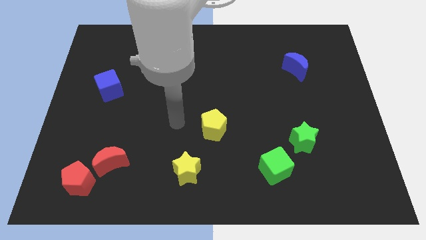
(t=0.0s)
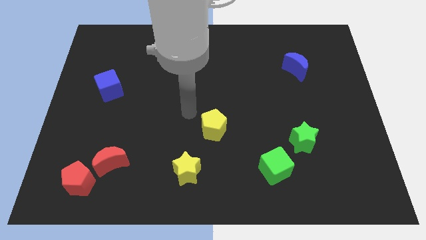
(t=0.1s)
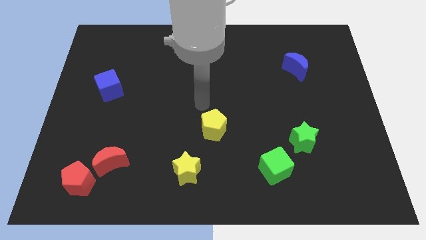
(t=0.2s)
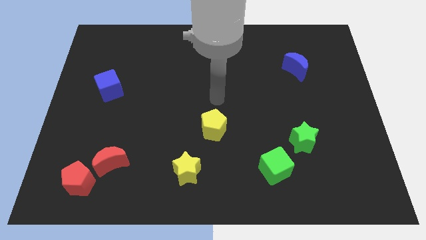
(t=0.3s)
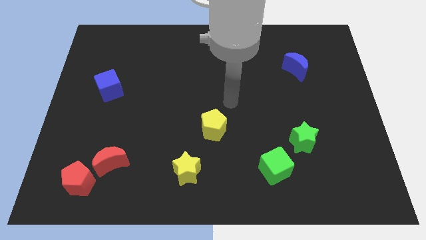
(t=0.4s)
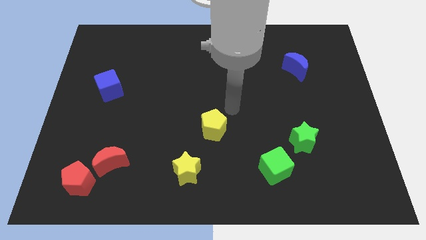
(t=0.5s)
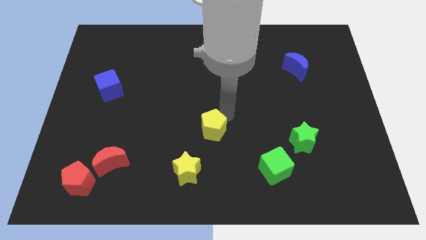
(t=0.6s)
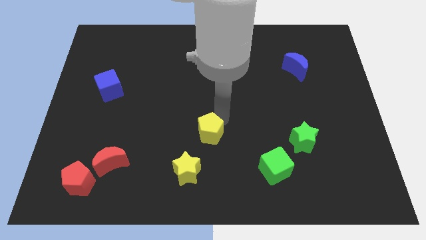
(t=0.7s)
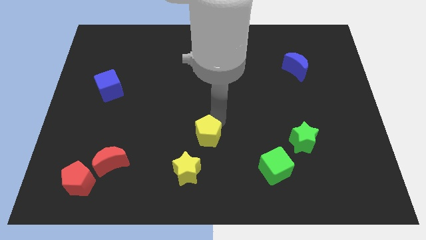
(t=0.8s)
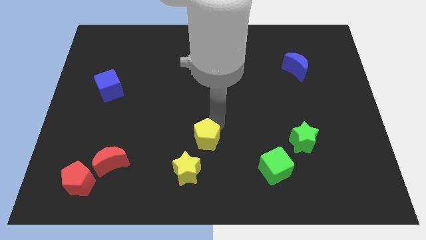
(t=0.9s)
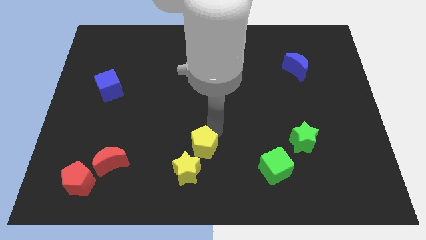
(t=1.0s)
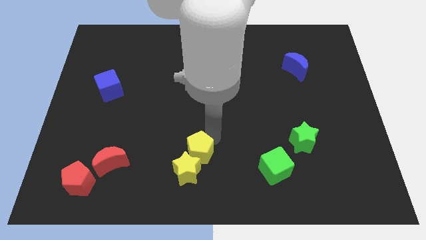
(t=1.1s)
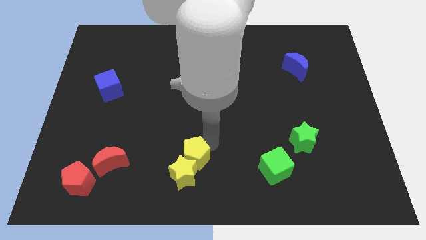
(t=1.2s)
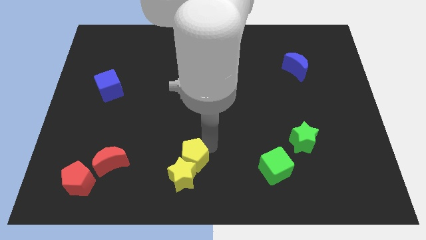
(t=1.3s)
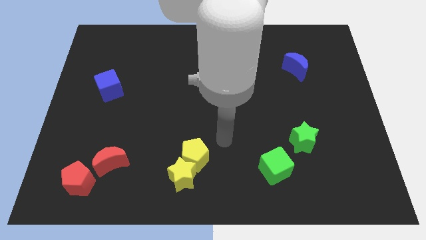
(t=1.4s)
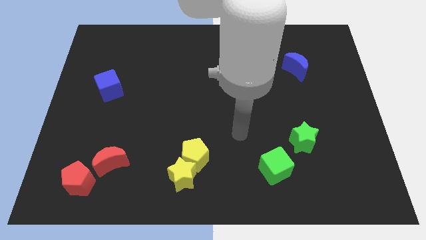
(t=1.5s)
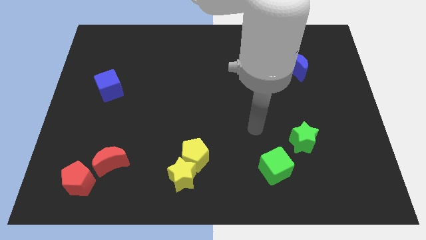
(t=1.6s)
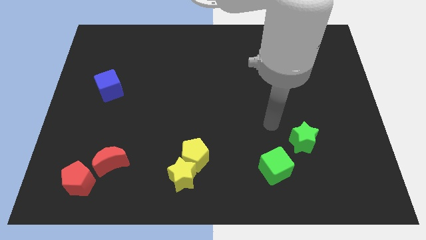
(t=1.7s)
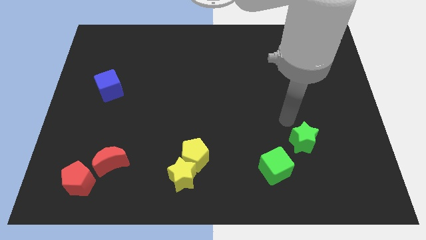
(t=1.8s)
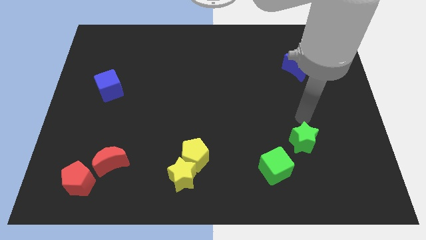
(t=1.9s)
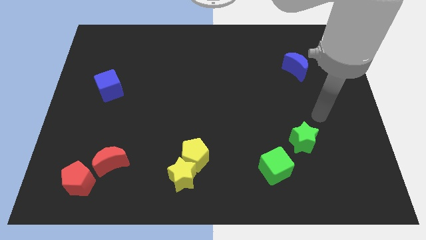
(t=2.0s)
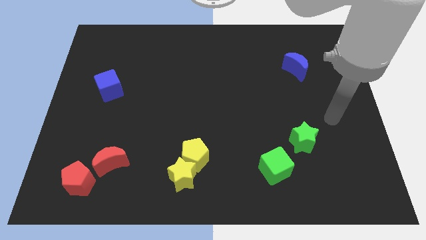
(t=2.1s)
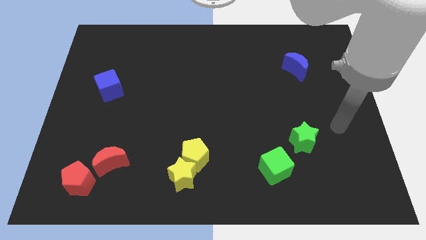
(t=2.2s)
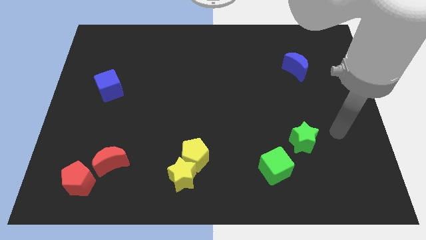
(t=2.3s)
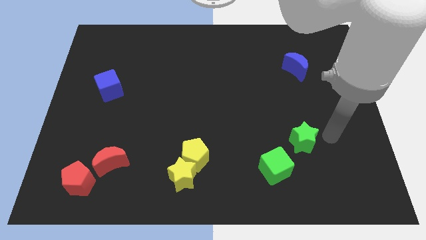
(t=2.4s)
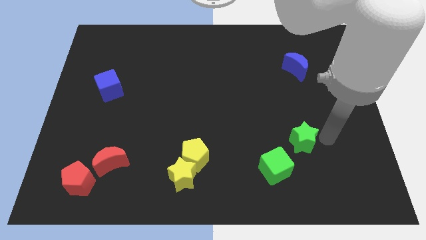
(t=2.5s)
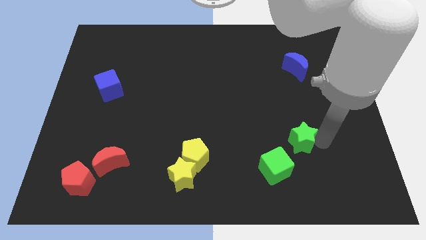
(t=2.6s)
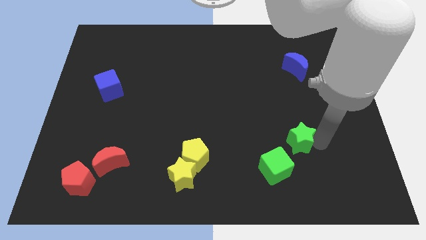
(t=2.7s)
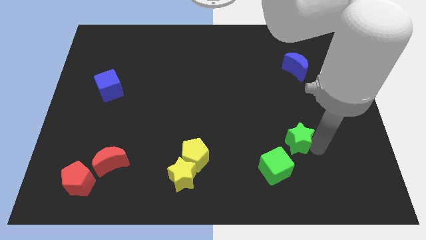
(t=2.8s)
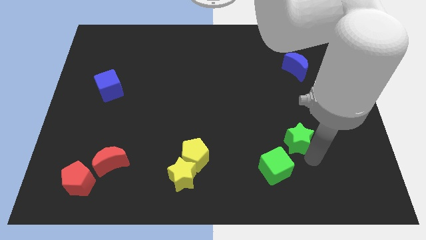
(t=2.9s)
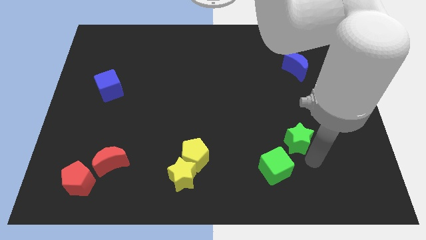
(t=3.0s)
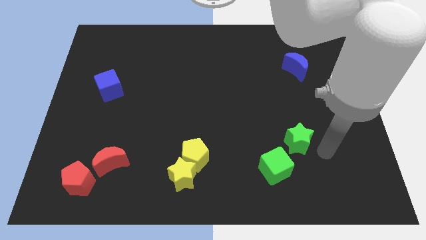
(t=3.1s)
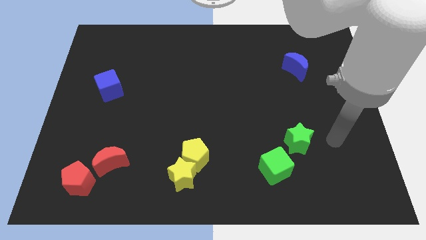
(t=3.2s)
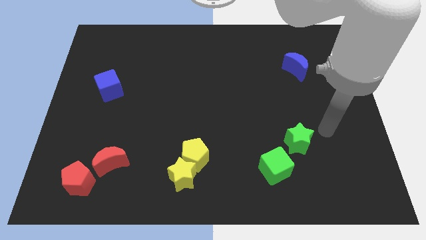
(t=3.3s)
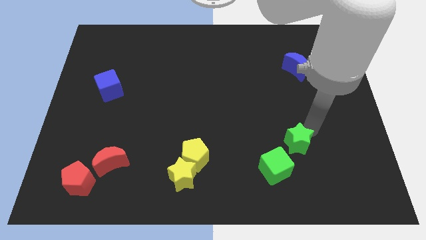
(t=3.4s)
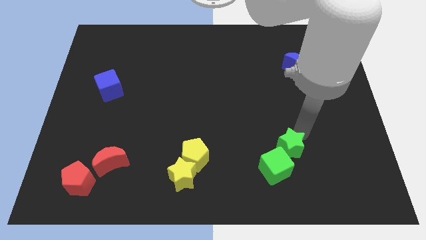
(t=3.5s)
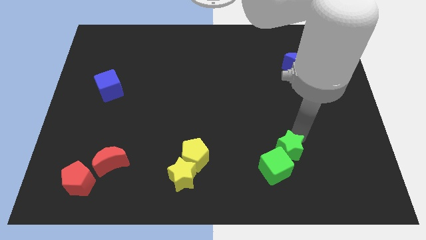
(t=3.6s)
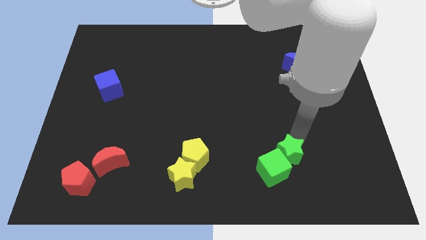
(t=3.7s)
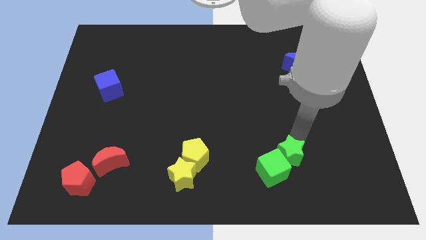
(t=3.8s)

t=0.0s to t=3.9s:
make a pair of blocks with yellow and green blocks

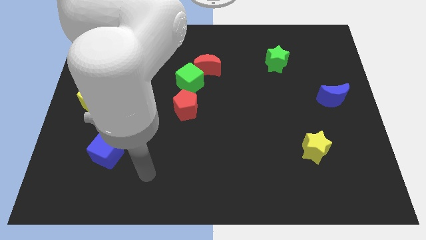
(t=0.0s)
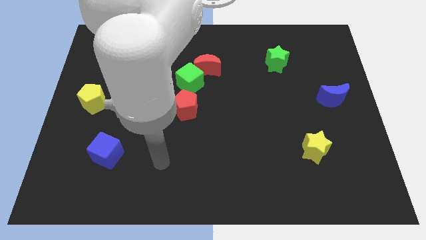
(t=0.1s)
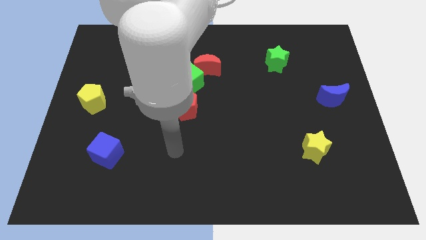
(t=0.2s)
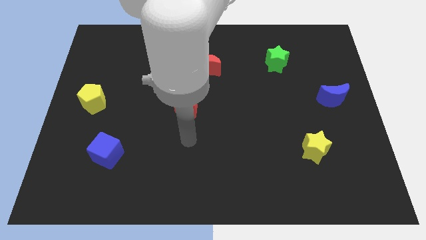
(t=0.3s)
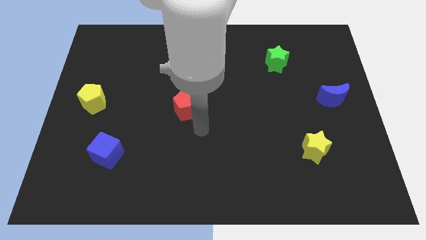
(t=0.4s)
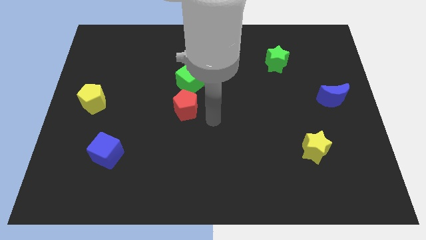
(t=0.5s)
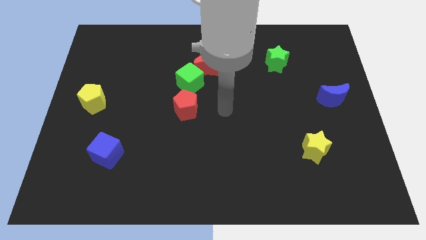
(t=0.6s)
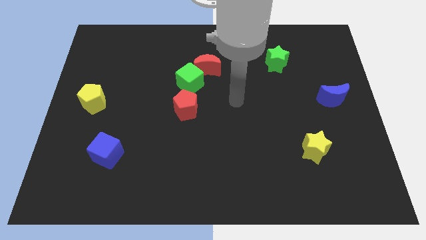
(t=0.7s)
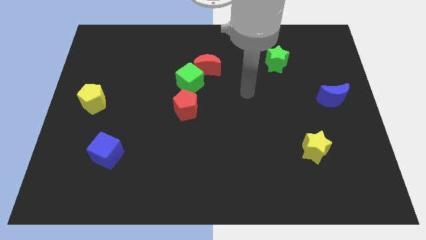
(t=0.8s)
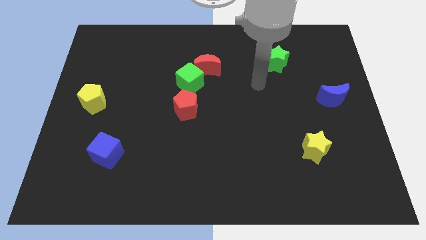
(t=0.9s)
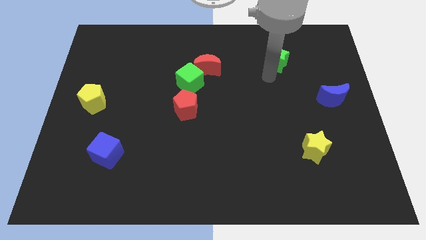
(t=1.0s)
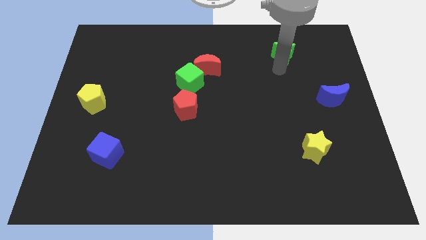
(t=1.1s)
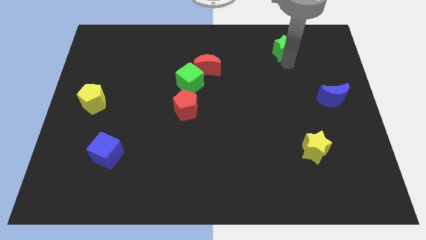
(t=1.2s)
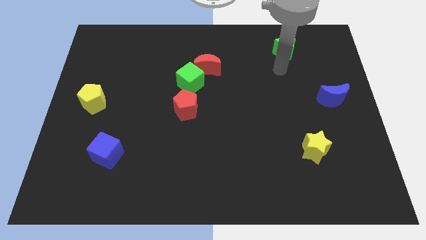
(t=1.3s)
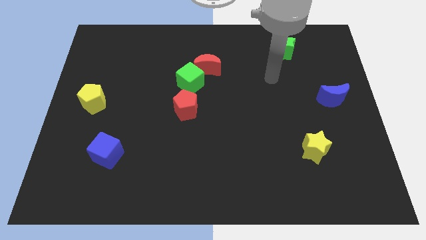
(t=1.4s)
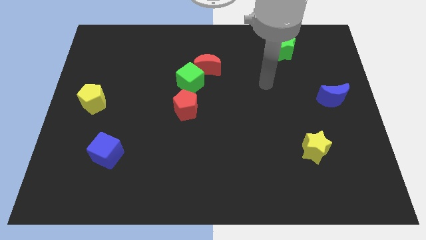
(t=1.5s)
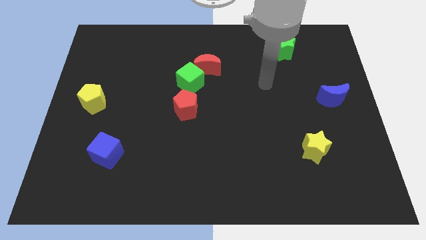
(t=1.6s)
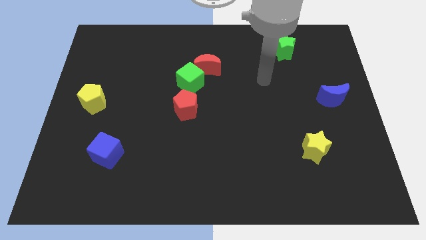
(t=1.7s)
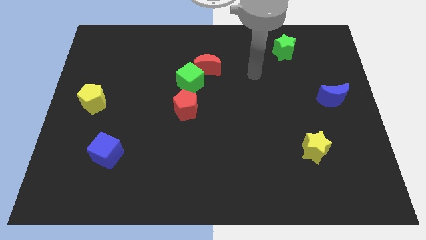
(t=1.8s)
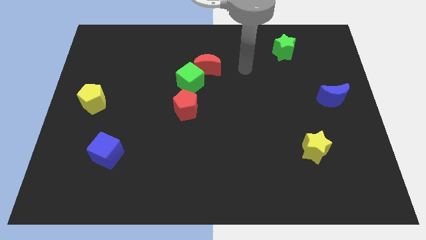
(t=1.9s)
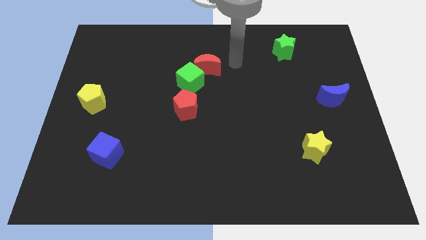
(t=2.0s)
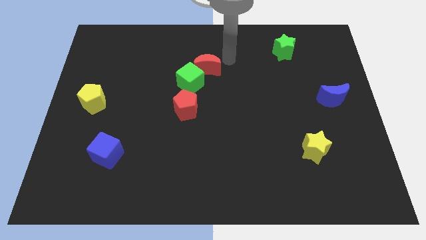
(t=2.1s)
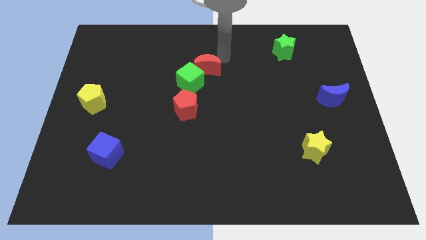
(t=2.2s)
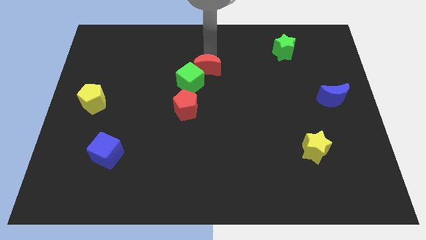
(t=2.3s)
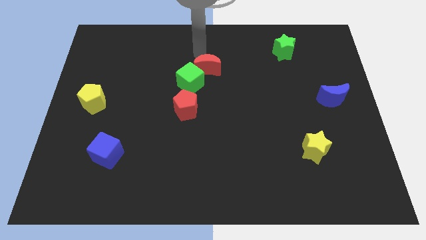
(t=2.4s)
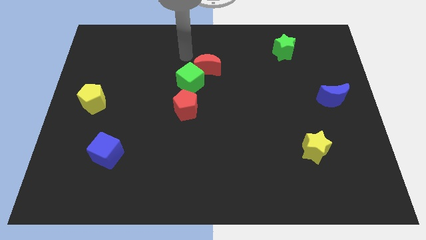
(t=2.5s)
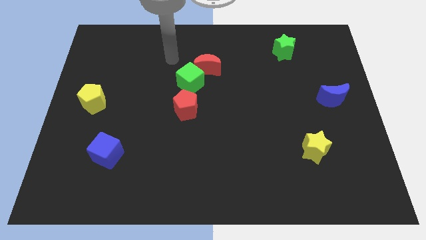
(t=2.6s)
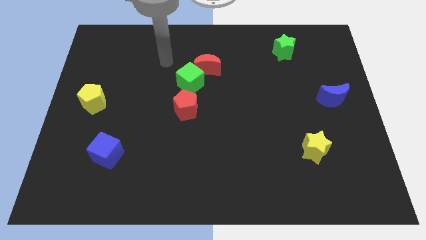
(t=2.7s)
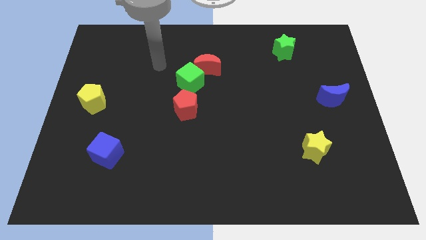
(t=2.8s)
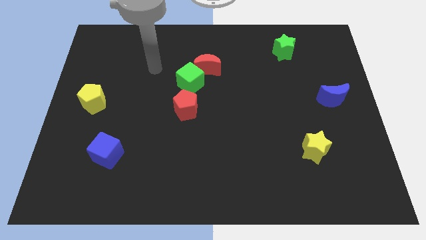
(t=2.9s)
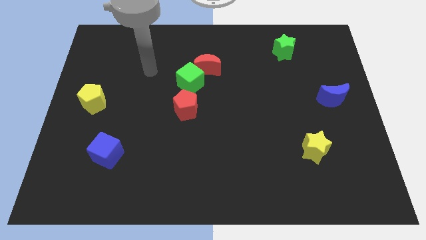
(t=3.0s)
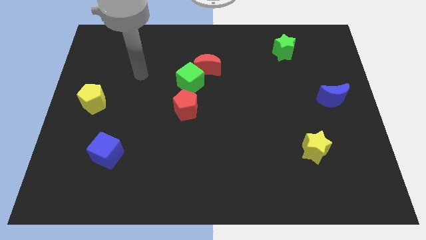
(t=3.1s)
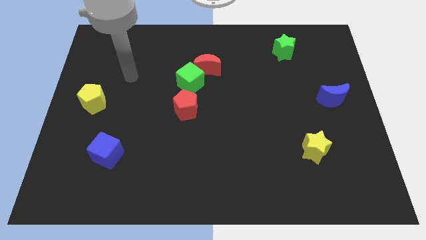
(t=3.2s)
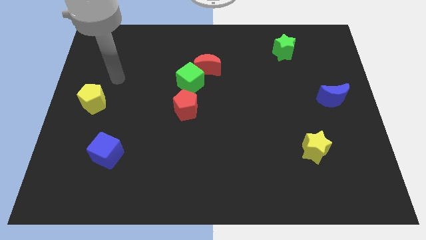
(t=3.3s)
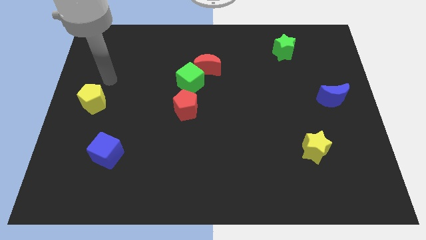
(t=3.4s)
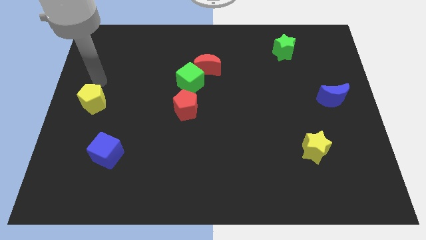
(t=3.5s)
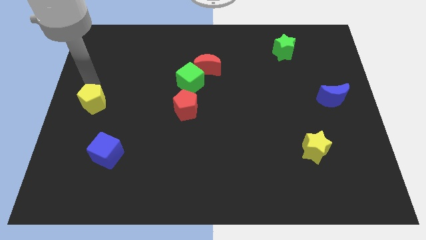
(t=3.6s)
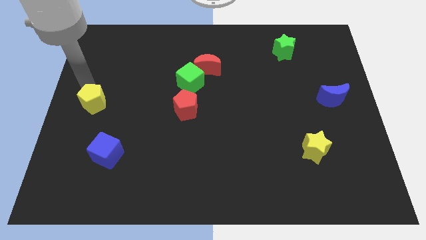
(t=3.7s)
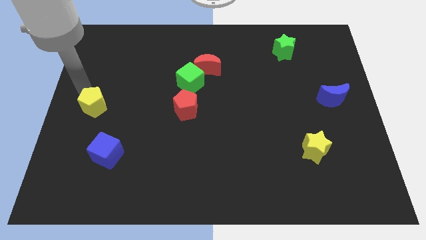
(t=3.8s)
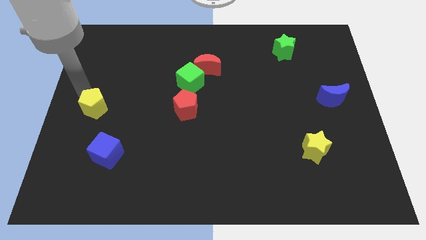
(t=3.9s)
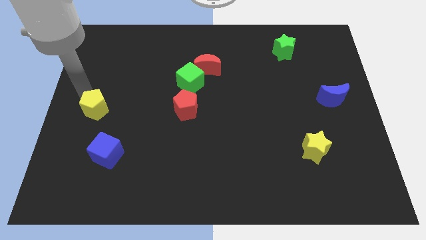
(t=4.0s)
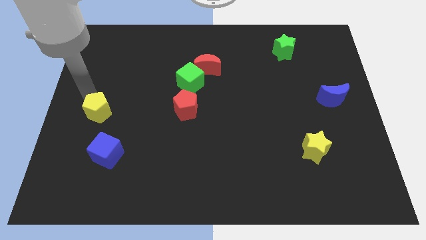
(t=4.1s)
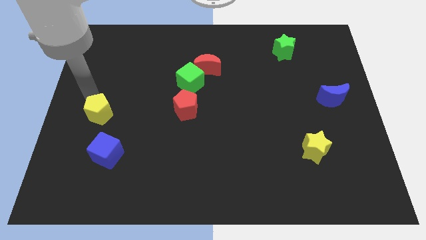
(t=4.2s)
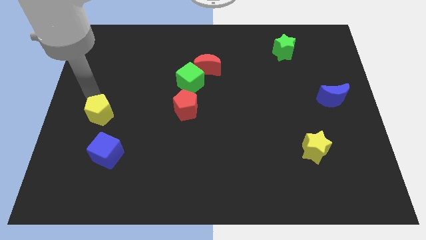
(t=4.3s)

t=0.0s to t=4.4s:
slightly move the yellow pentagon on the board

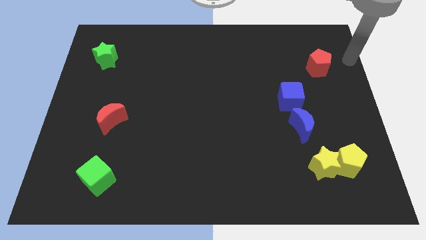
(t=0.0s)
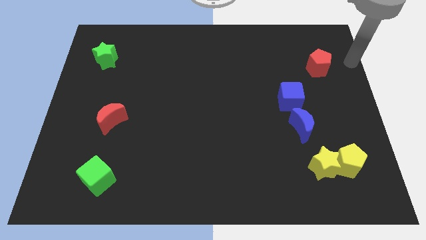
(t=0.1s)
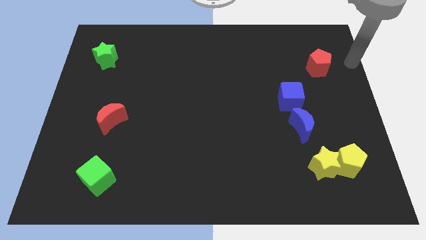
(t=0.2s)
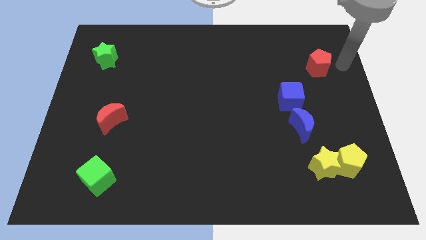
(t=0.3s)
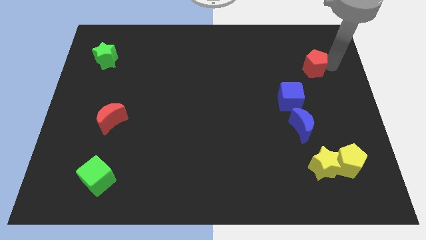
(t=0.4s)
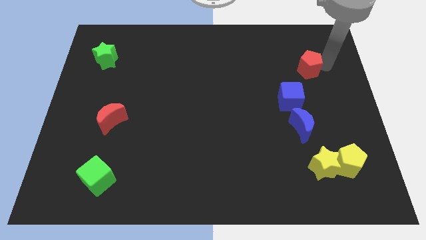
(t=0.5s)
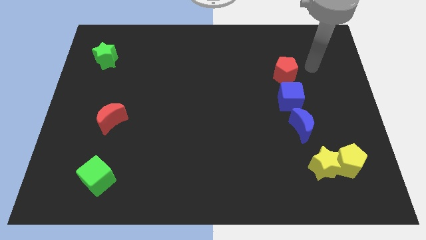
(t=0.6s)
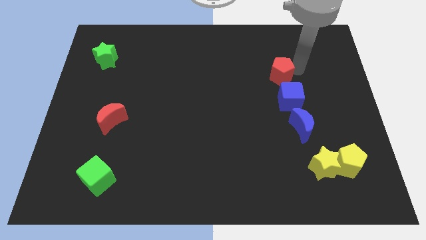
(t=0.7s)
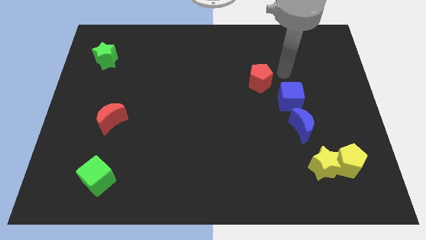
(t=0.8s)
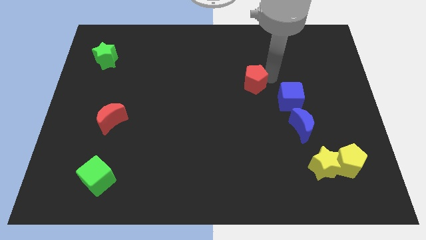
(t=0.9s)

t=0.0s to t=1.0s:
slide the red pentagon slightly to the left
